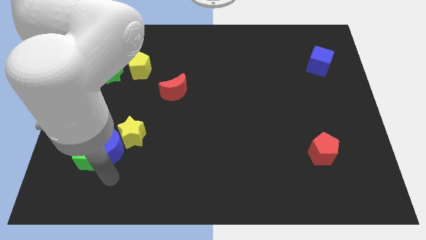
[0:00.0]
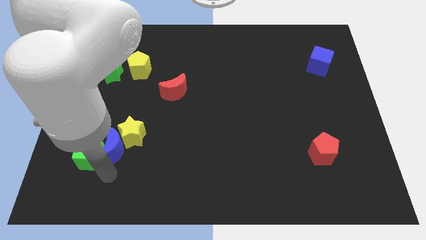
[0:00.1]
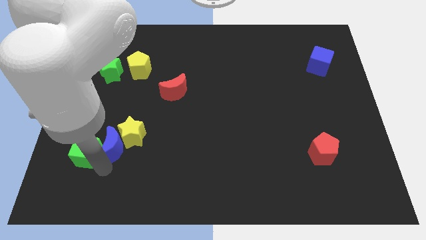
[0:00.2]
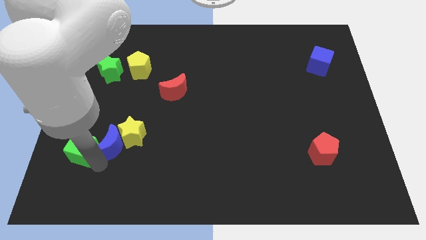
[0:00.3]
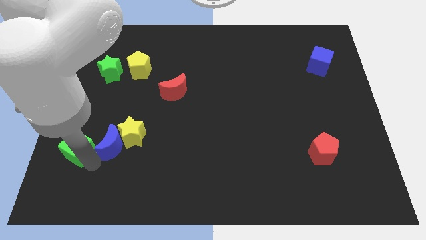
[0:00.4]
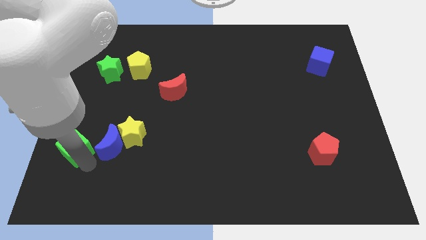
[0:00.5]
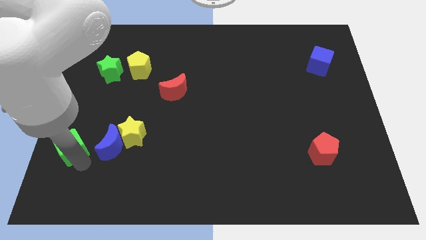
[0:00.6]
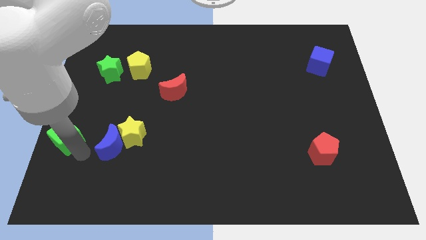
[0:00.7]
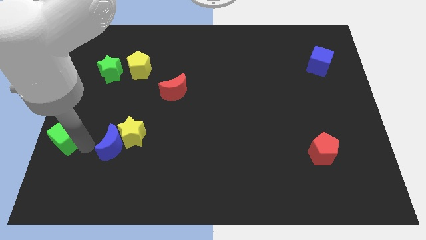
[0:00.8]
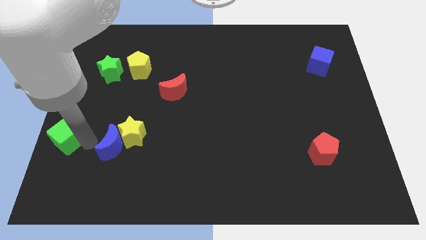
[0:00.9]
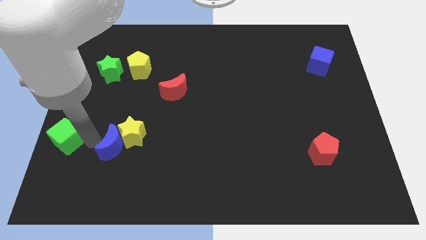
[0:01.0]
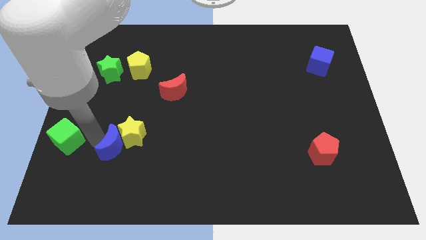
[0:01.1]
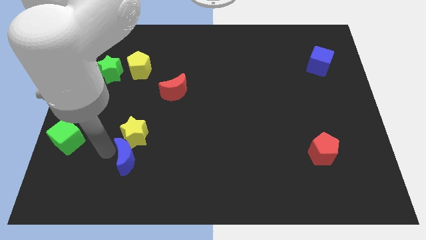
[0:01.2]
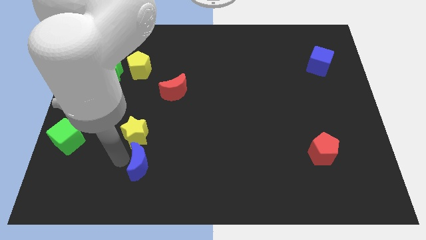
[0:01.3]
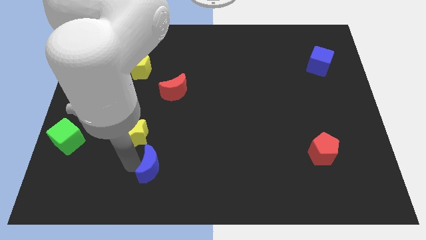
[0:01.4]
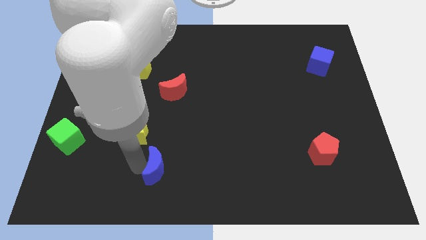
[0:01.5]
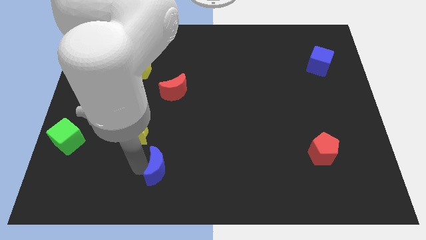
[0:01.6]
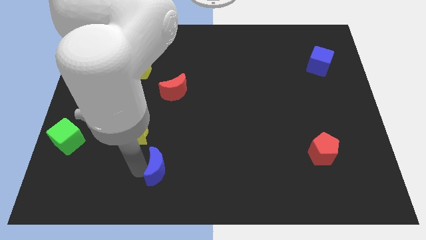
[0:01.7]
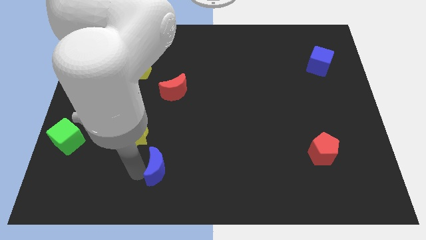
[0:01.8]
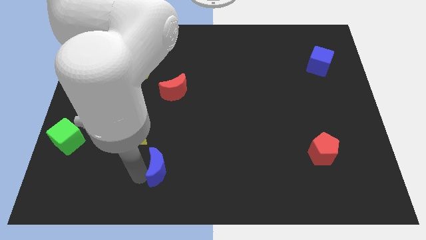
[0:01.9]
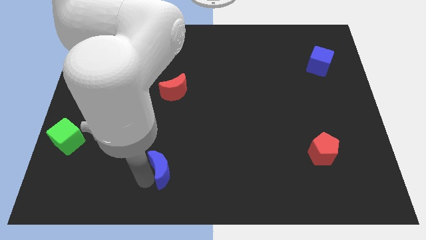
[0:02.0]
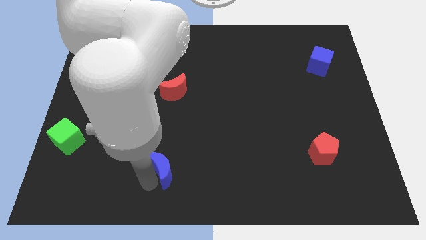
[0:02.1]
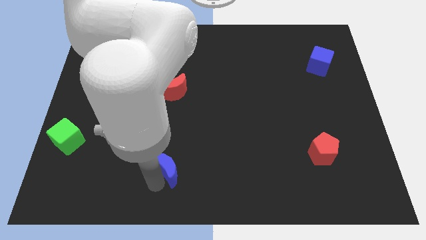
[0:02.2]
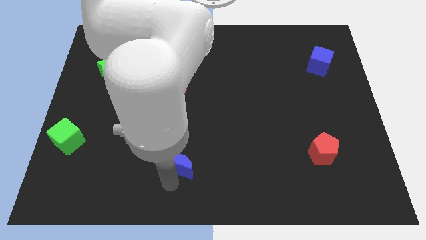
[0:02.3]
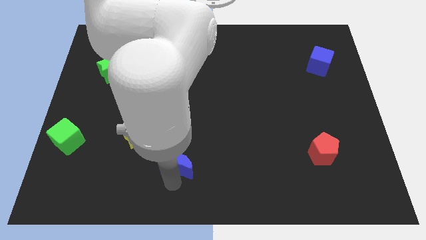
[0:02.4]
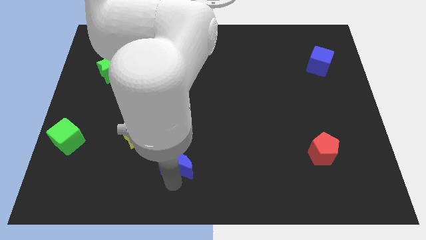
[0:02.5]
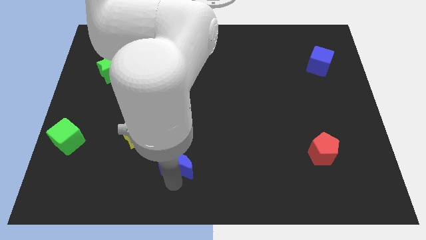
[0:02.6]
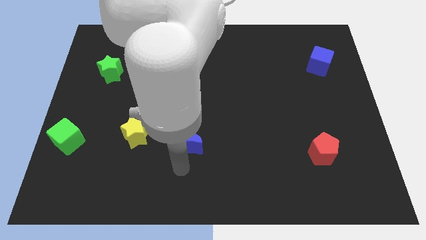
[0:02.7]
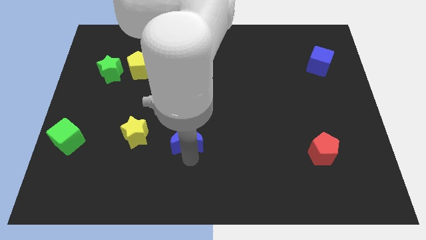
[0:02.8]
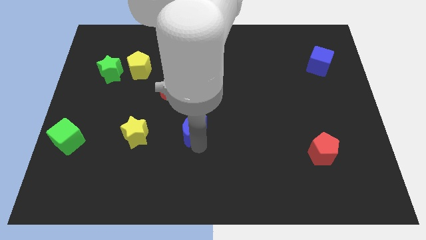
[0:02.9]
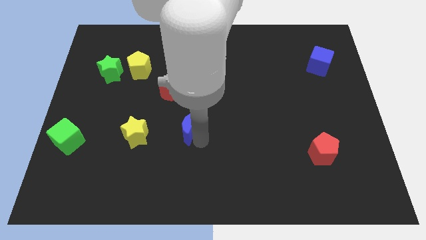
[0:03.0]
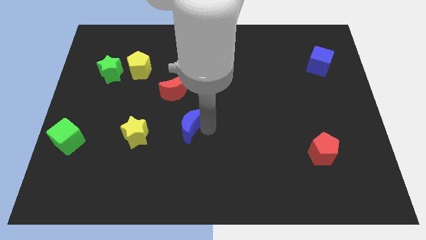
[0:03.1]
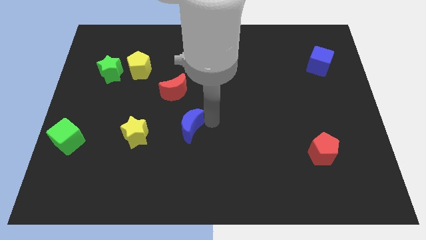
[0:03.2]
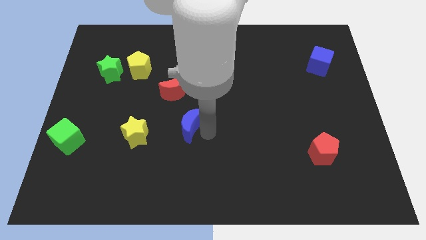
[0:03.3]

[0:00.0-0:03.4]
place blue moon to the right of yellow star

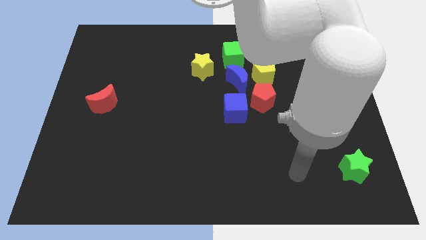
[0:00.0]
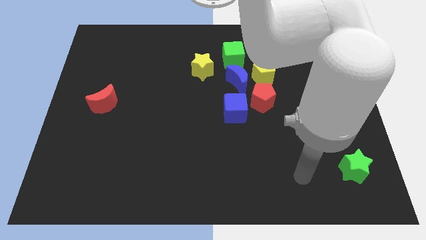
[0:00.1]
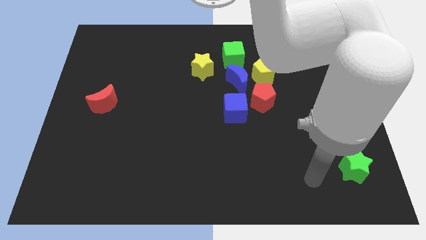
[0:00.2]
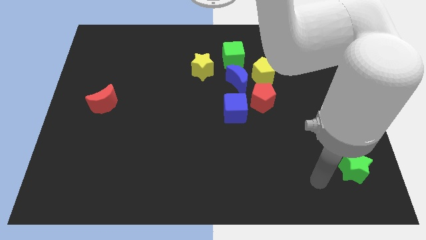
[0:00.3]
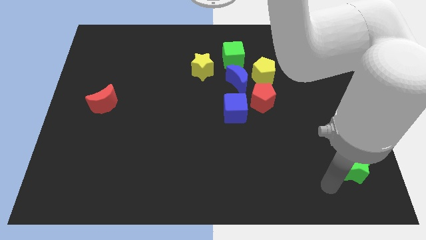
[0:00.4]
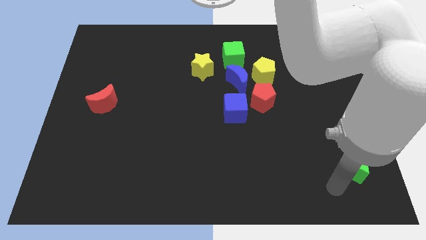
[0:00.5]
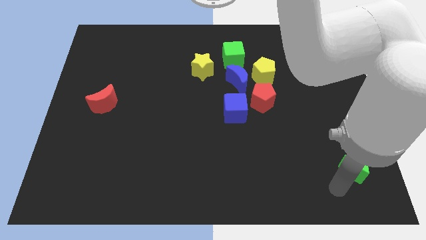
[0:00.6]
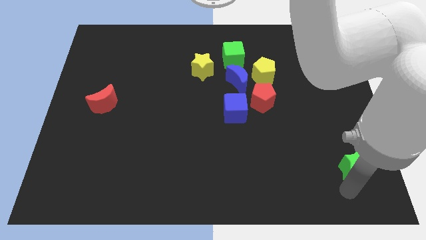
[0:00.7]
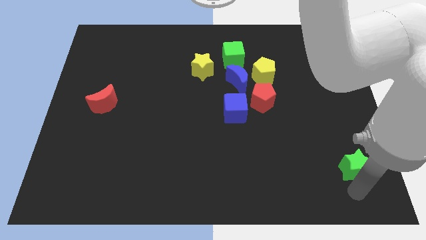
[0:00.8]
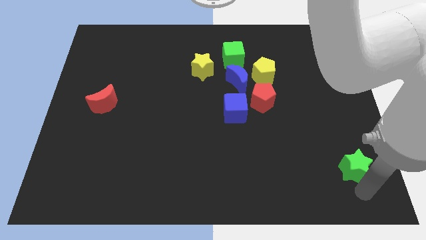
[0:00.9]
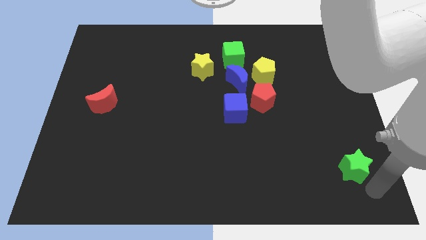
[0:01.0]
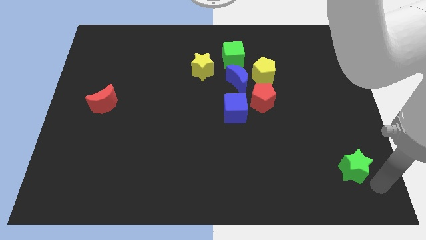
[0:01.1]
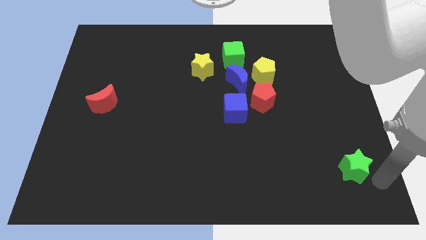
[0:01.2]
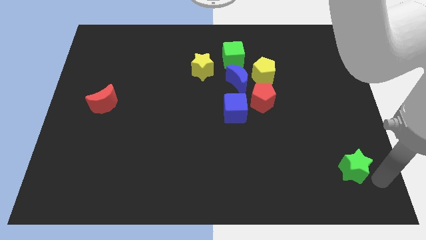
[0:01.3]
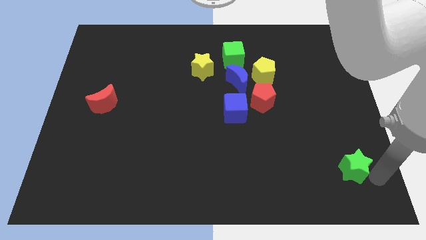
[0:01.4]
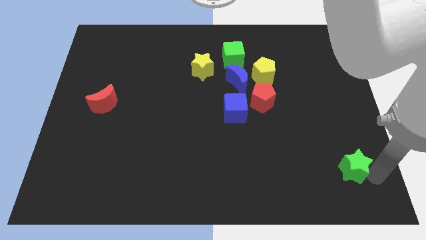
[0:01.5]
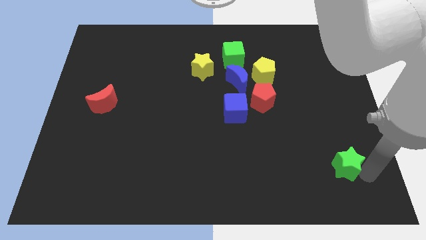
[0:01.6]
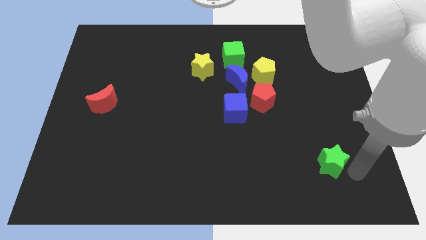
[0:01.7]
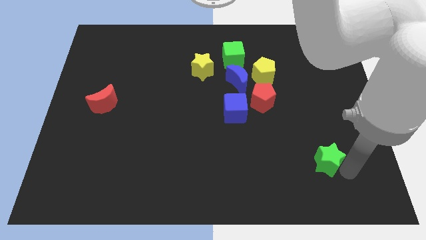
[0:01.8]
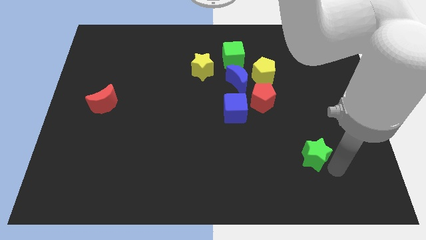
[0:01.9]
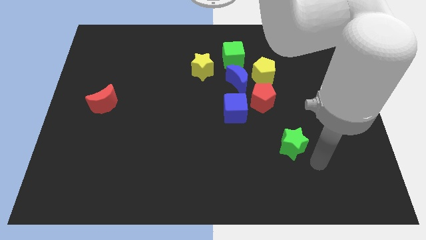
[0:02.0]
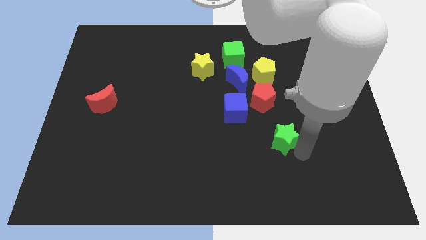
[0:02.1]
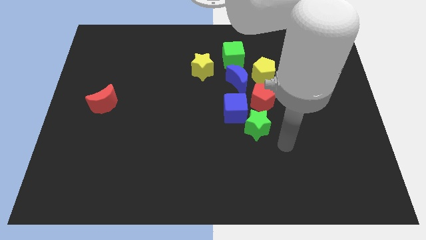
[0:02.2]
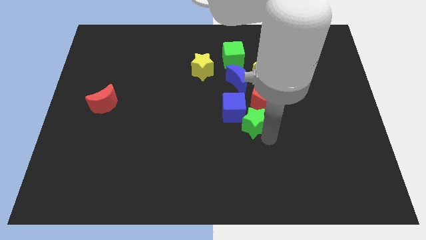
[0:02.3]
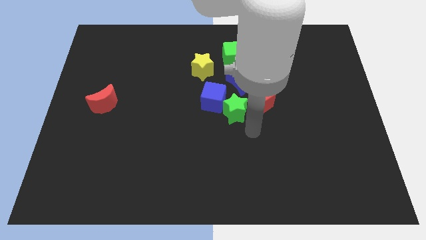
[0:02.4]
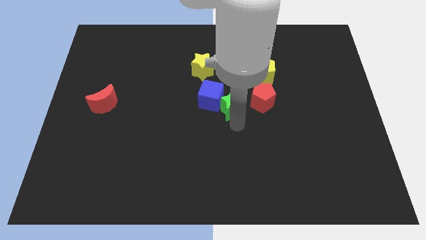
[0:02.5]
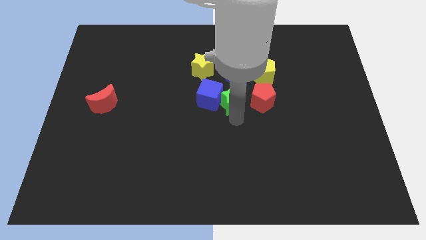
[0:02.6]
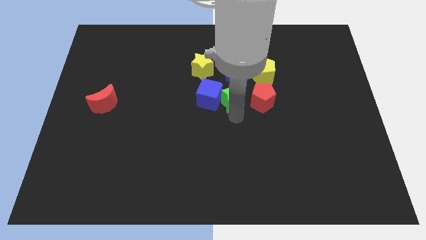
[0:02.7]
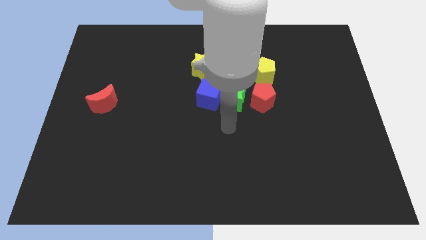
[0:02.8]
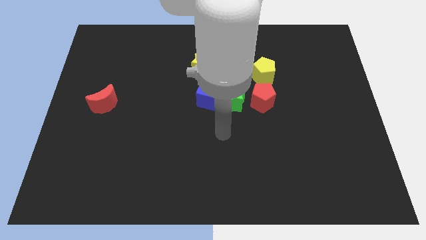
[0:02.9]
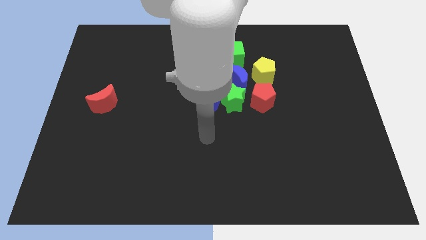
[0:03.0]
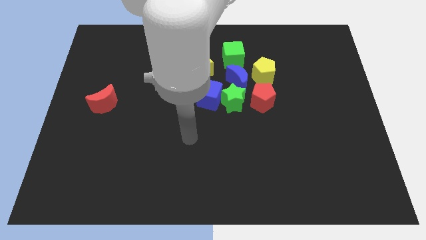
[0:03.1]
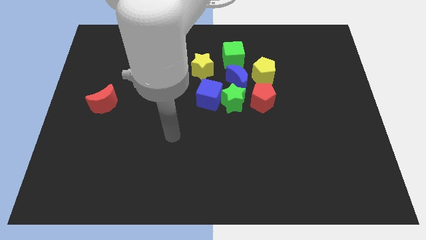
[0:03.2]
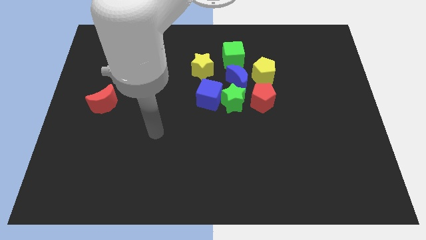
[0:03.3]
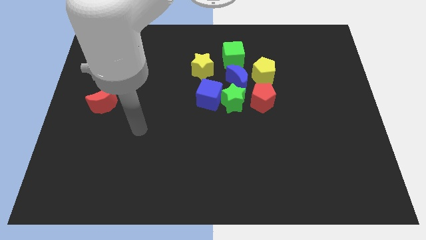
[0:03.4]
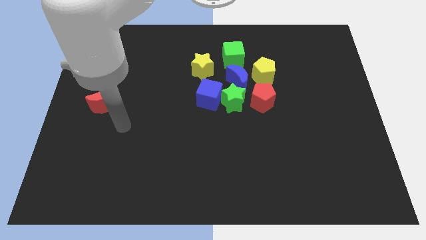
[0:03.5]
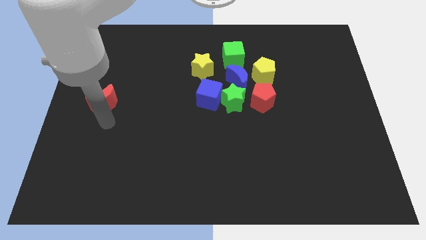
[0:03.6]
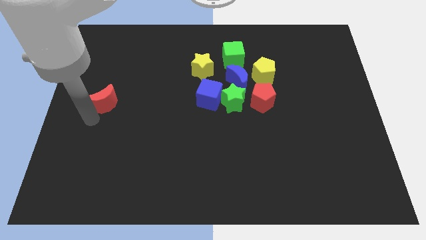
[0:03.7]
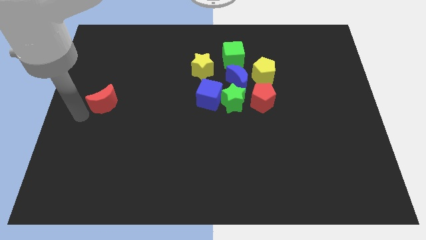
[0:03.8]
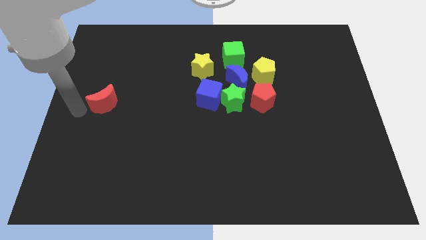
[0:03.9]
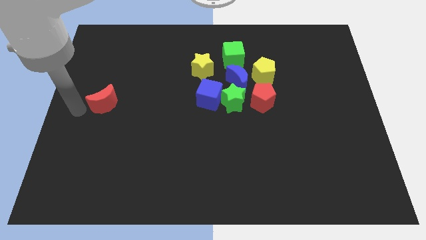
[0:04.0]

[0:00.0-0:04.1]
place the green star in between blue cube and red pentagon

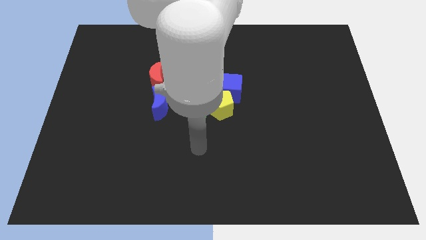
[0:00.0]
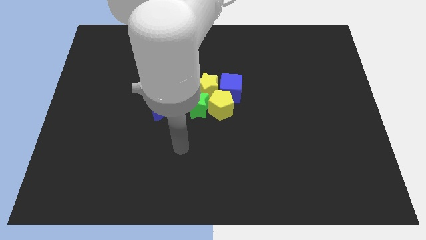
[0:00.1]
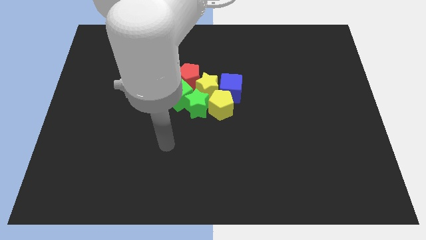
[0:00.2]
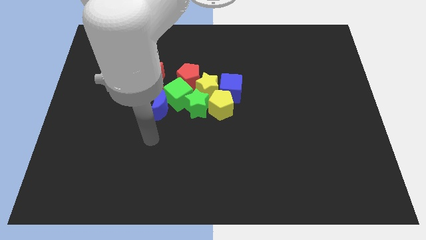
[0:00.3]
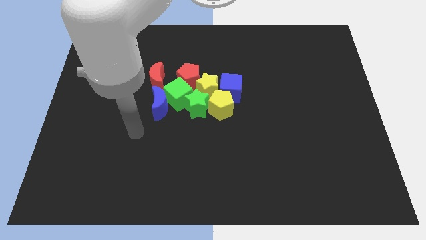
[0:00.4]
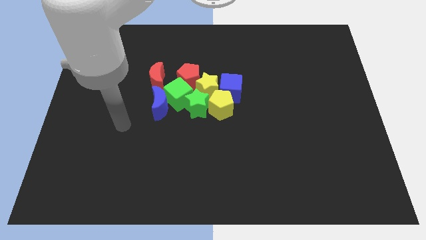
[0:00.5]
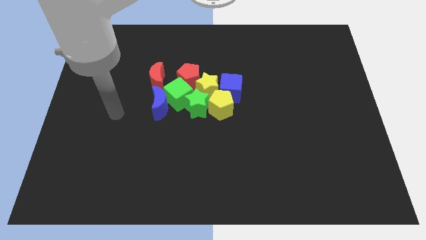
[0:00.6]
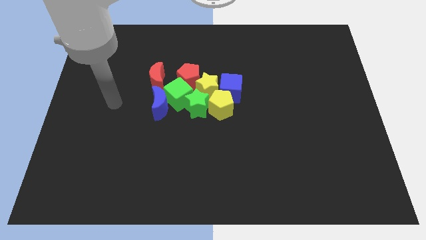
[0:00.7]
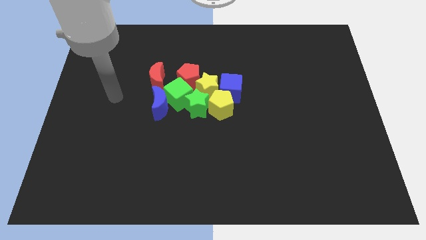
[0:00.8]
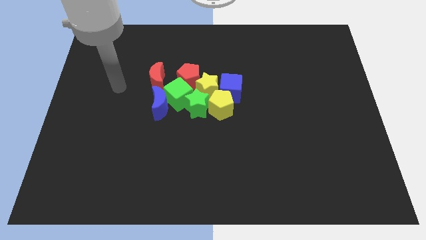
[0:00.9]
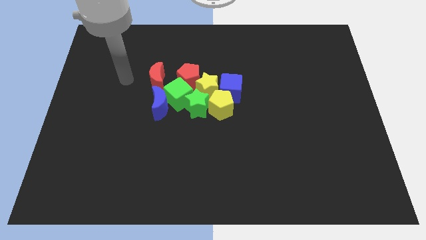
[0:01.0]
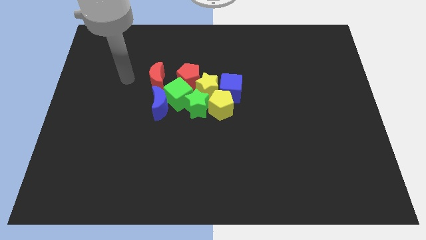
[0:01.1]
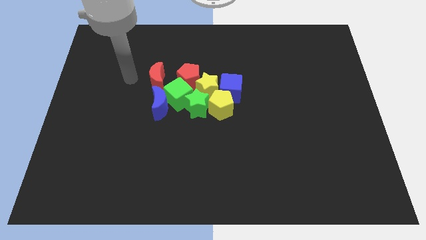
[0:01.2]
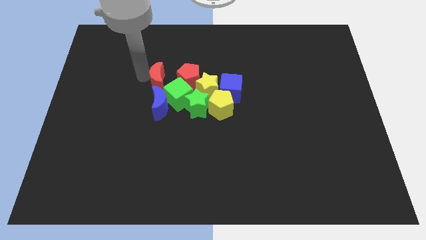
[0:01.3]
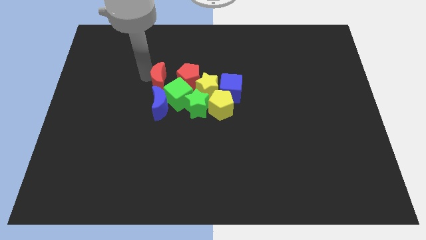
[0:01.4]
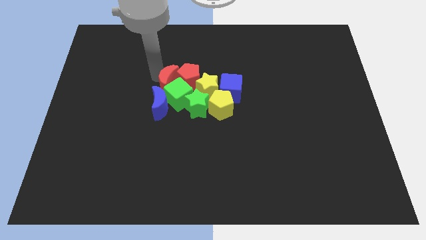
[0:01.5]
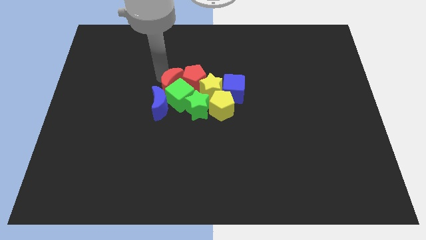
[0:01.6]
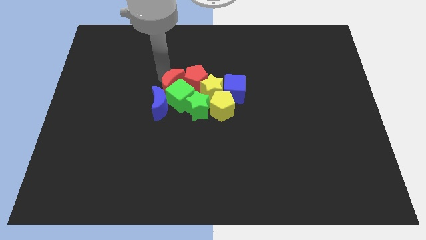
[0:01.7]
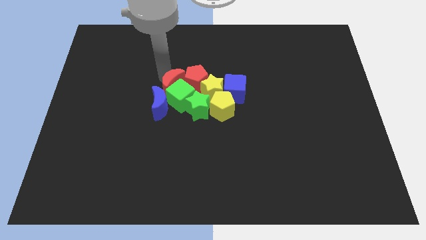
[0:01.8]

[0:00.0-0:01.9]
move the red moon close to green cube and red pentagon
